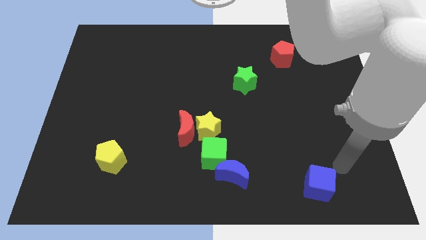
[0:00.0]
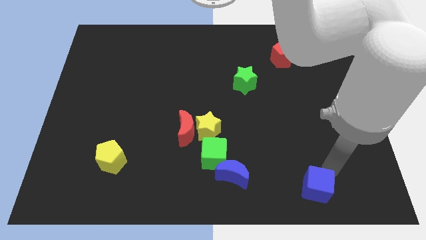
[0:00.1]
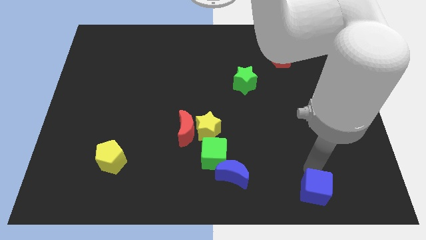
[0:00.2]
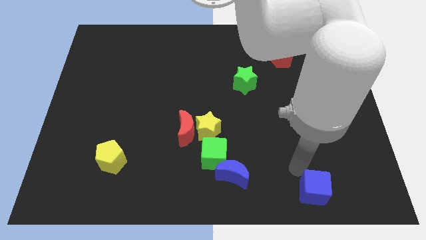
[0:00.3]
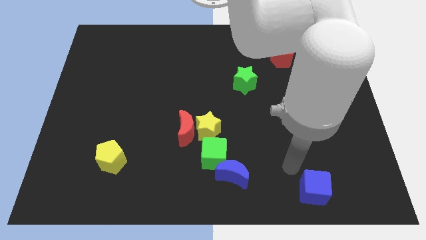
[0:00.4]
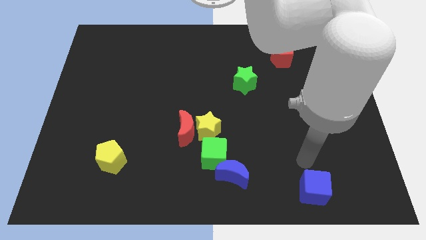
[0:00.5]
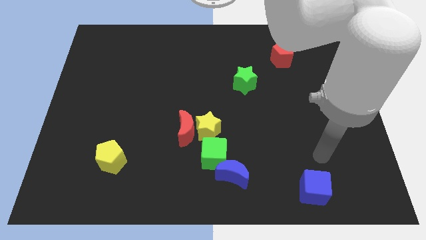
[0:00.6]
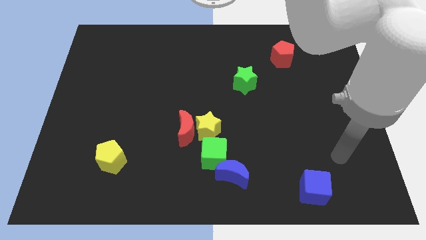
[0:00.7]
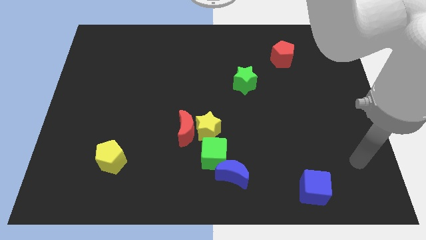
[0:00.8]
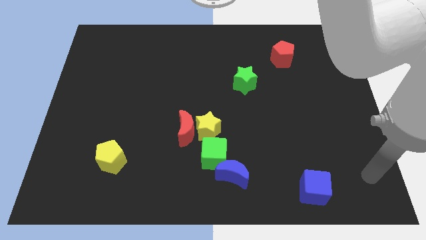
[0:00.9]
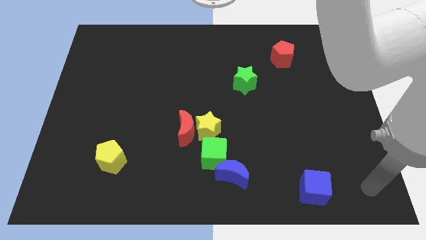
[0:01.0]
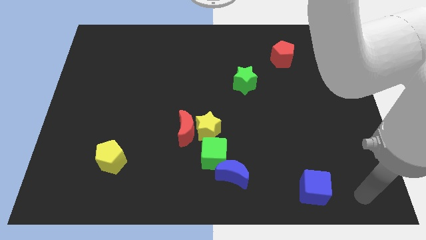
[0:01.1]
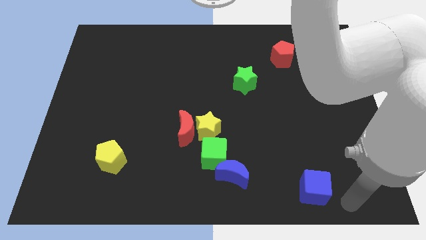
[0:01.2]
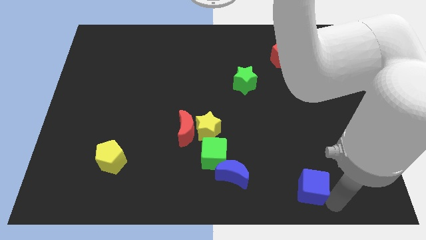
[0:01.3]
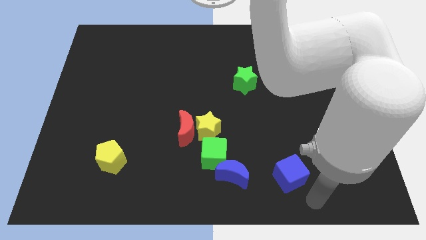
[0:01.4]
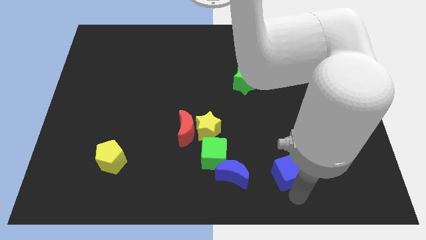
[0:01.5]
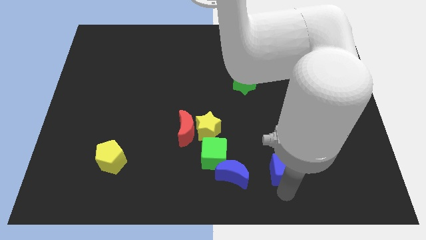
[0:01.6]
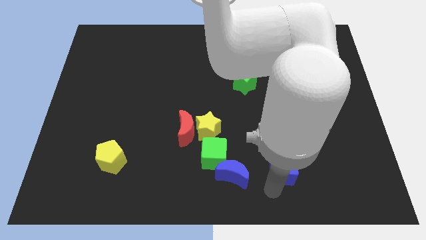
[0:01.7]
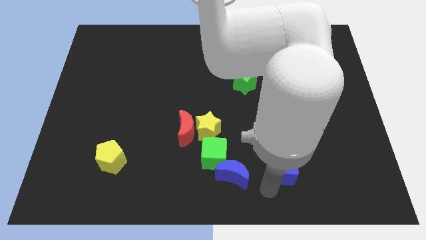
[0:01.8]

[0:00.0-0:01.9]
slide the blue cube close to the blue moon

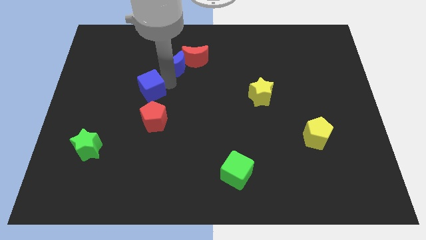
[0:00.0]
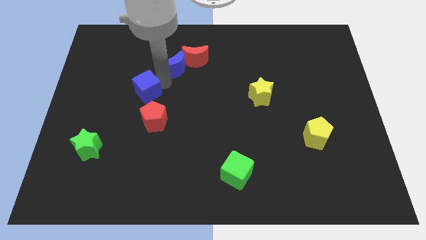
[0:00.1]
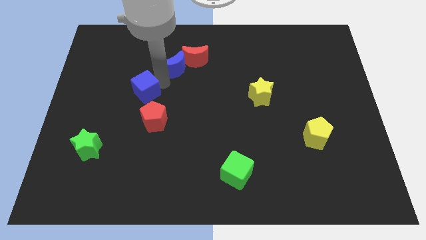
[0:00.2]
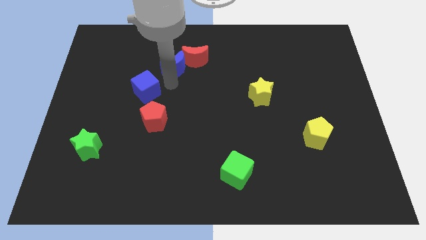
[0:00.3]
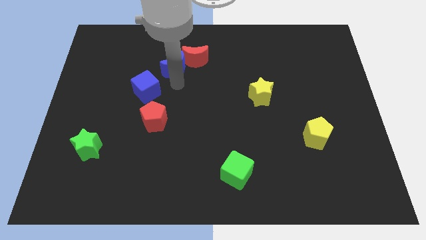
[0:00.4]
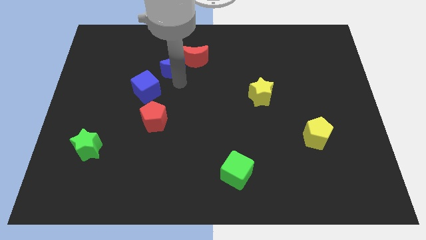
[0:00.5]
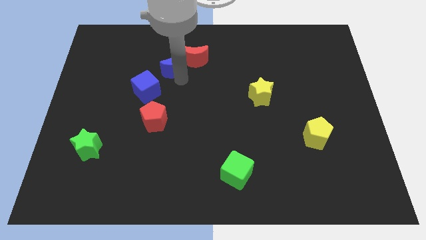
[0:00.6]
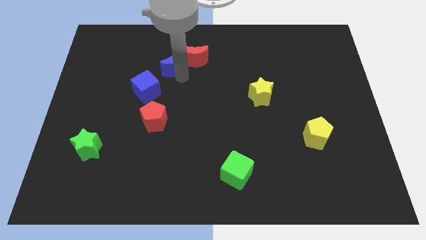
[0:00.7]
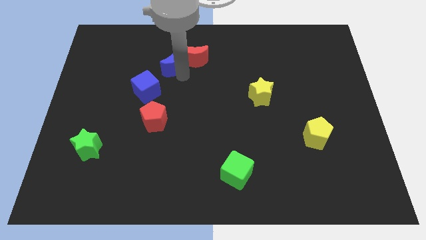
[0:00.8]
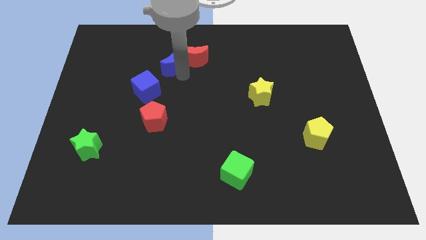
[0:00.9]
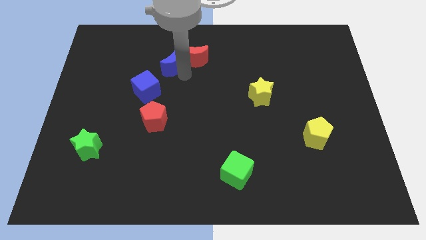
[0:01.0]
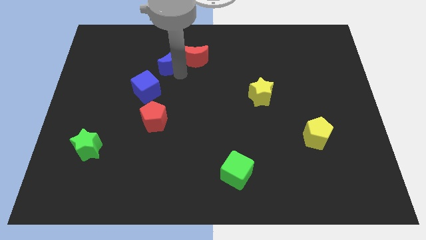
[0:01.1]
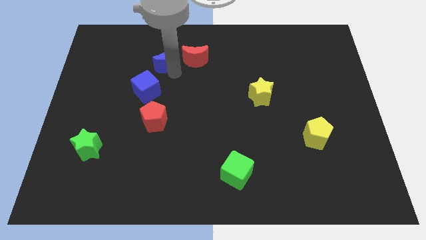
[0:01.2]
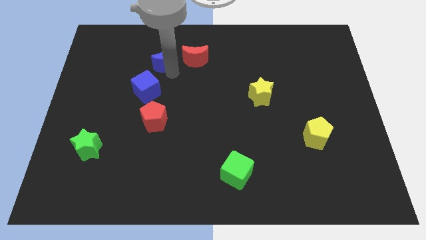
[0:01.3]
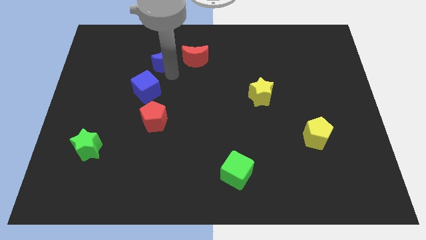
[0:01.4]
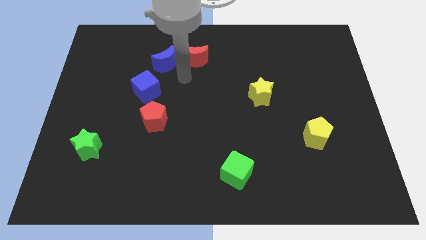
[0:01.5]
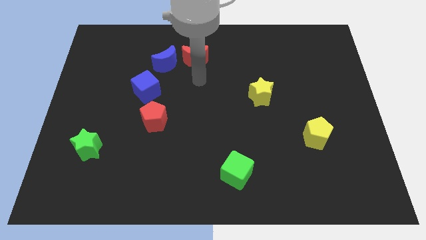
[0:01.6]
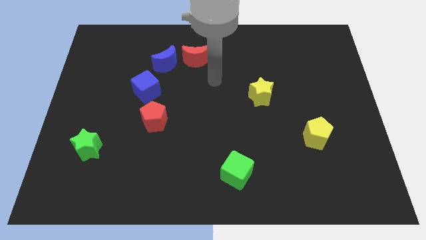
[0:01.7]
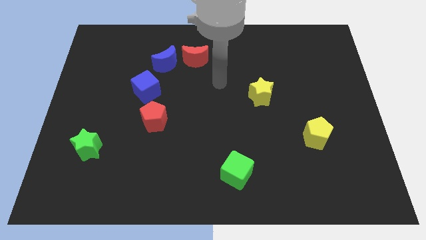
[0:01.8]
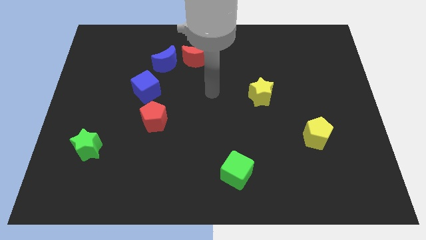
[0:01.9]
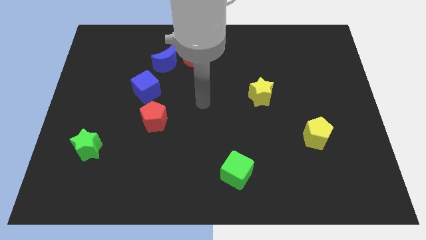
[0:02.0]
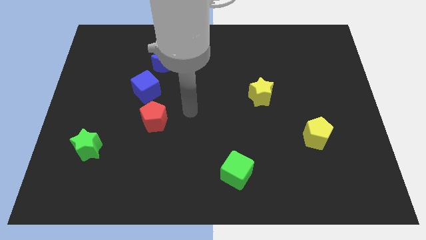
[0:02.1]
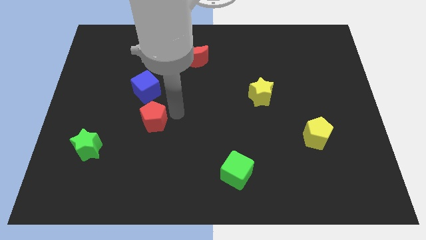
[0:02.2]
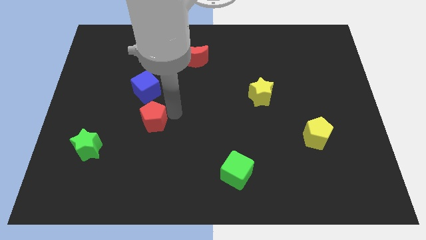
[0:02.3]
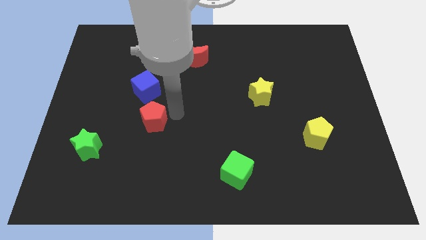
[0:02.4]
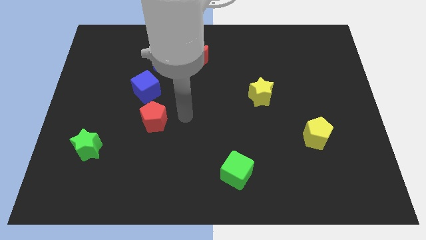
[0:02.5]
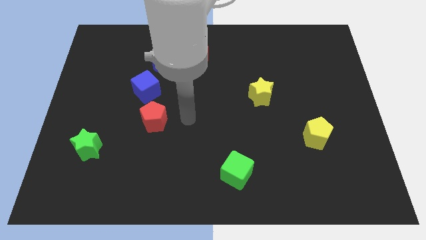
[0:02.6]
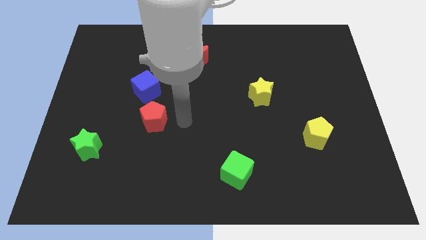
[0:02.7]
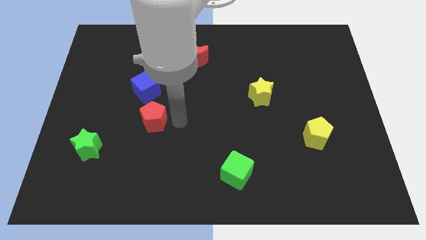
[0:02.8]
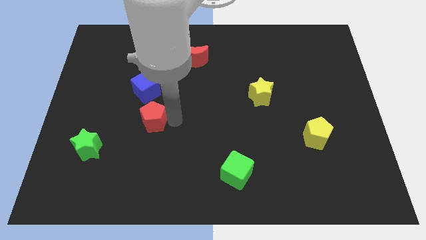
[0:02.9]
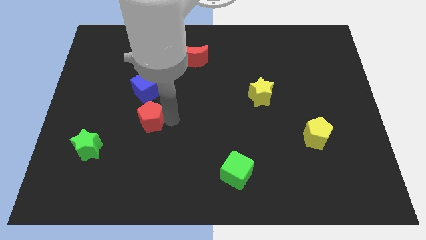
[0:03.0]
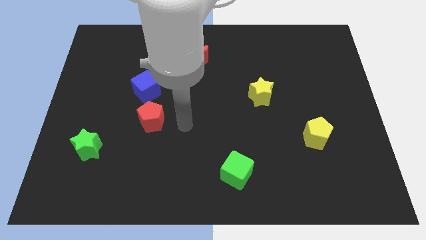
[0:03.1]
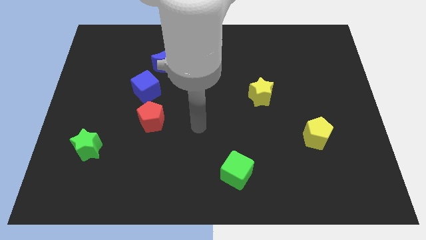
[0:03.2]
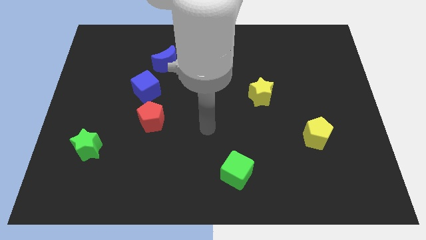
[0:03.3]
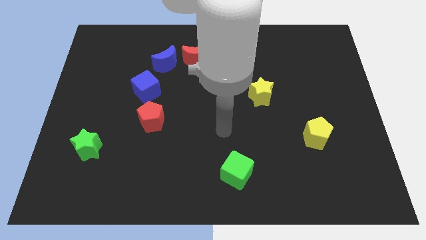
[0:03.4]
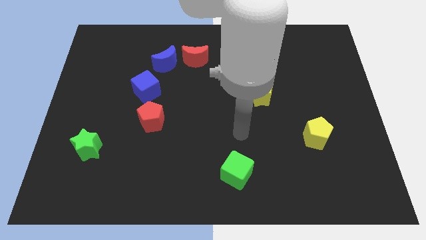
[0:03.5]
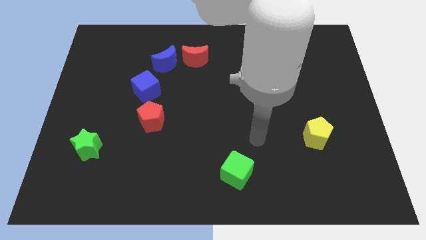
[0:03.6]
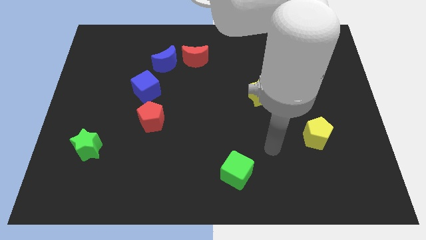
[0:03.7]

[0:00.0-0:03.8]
slightly move the blue semicircle to the left side of the red moon

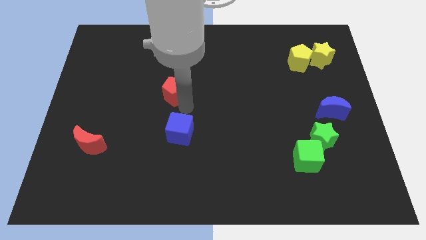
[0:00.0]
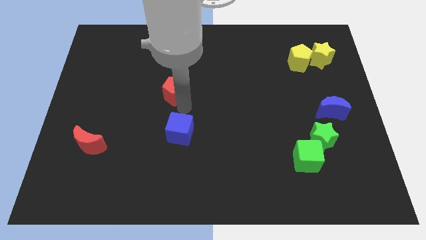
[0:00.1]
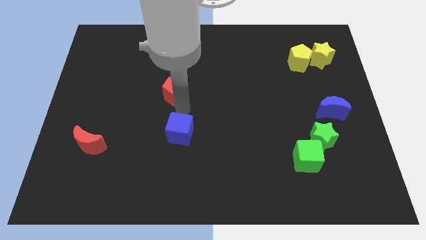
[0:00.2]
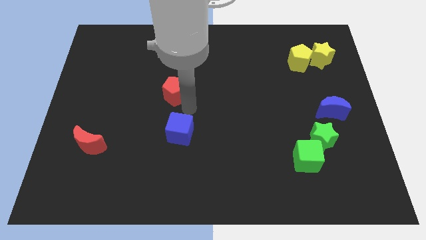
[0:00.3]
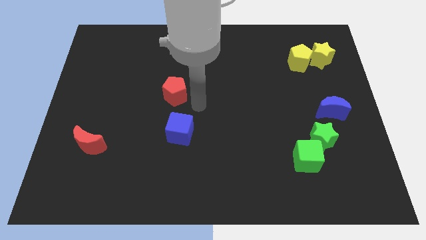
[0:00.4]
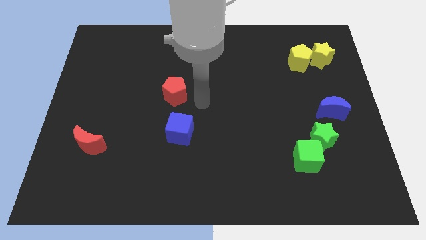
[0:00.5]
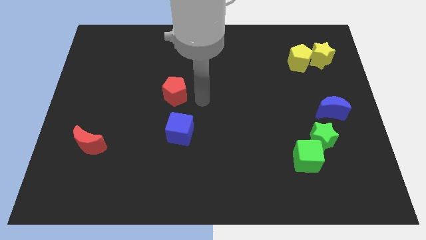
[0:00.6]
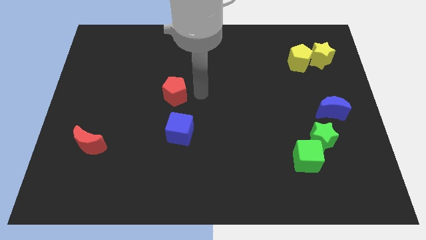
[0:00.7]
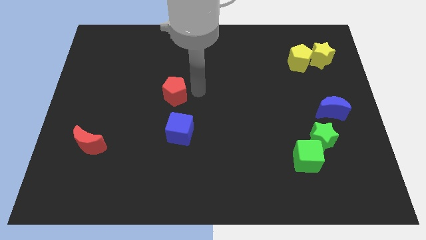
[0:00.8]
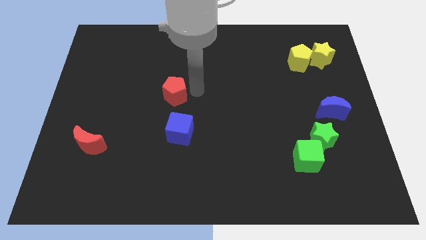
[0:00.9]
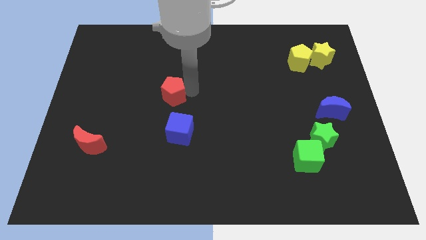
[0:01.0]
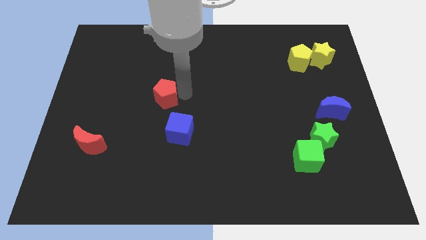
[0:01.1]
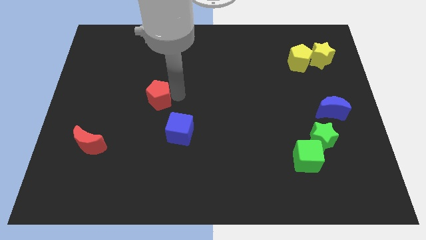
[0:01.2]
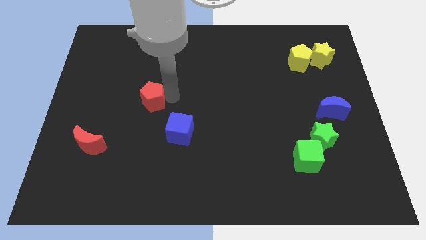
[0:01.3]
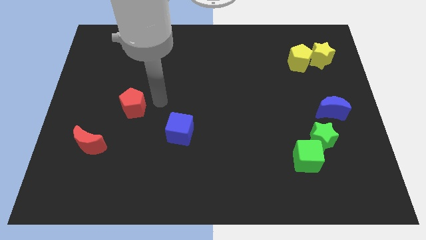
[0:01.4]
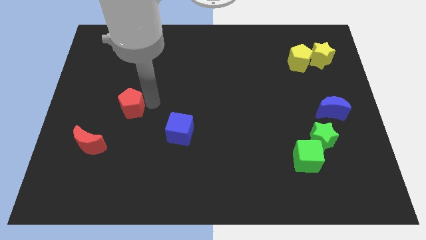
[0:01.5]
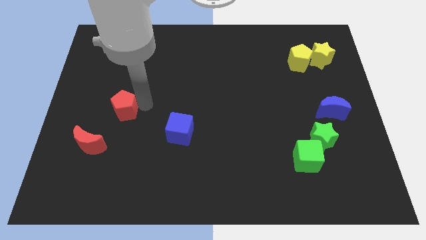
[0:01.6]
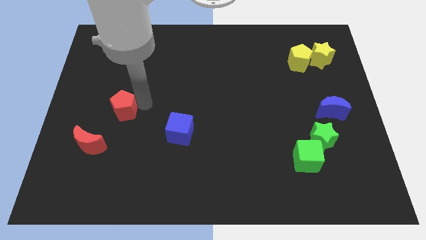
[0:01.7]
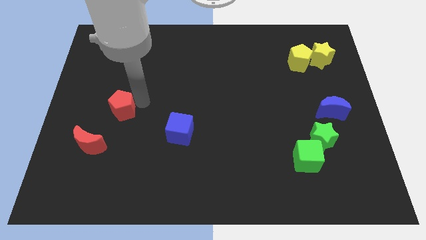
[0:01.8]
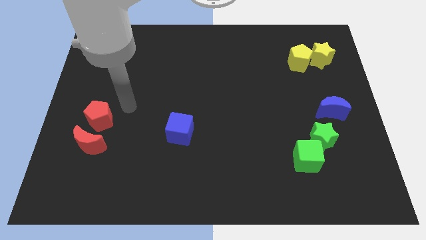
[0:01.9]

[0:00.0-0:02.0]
push the red pentagon towards the red crescent

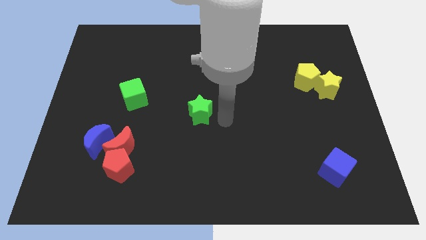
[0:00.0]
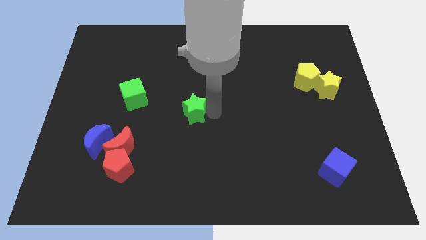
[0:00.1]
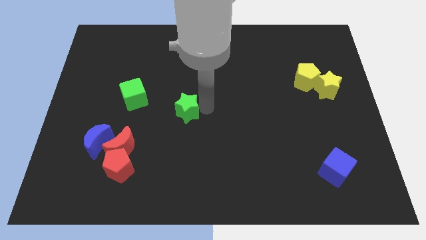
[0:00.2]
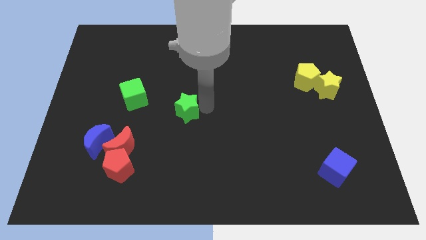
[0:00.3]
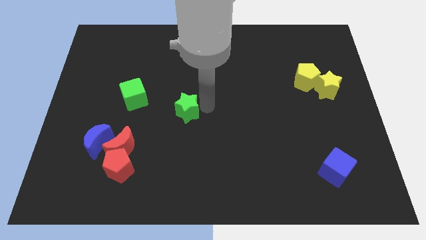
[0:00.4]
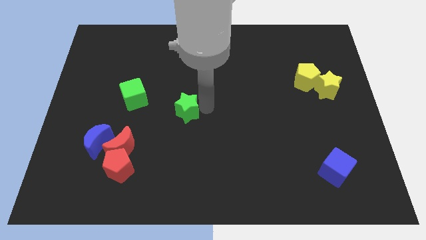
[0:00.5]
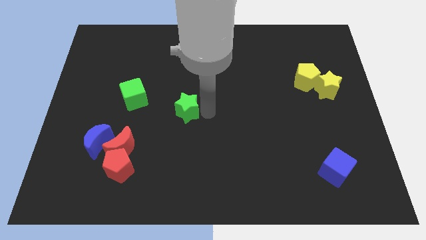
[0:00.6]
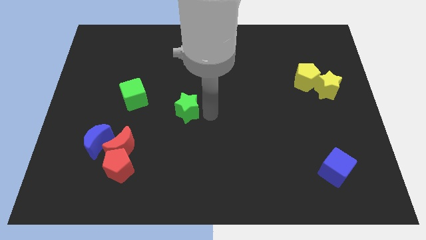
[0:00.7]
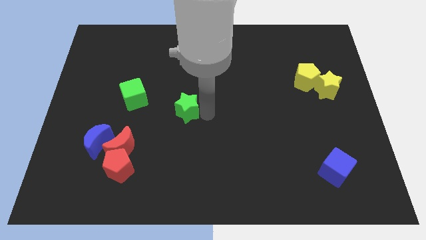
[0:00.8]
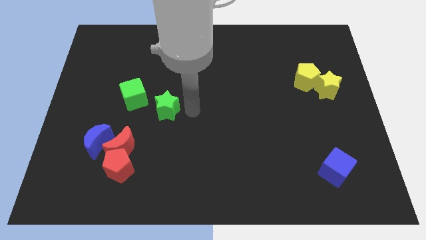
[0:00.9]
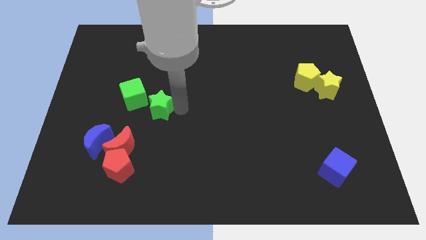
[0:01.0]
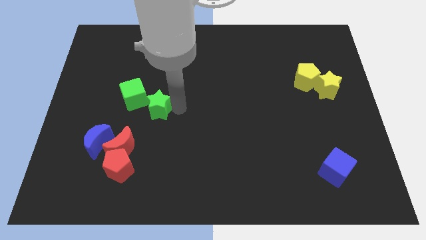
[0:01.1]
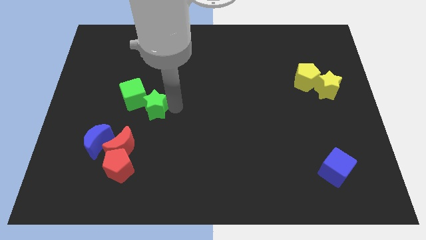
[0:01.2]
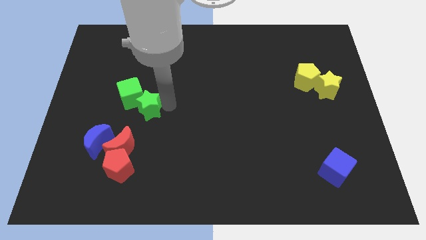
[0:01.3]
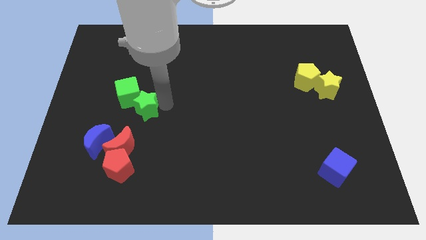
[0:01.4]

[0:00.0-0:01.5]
take the green star close to the green cube
